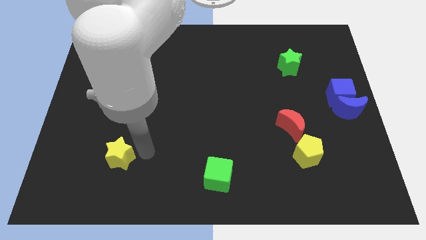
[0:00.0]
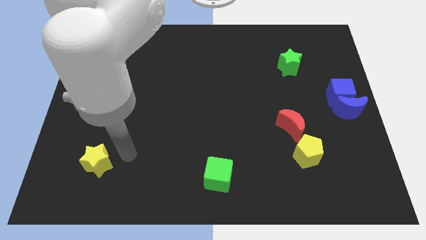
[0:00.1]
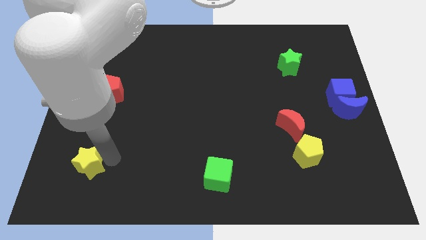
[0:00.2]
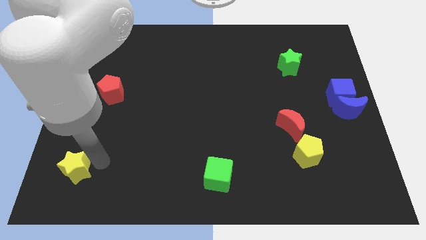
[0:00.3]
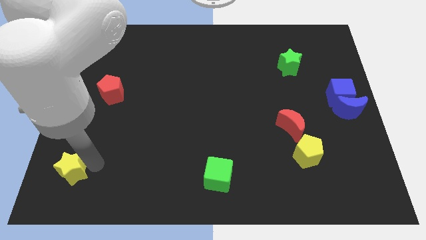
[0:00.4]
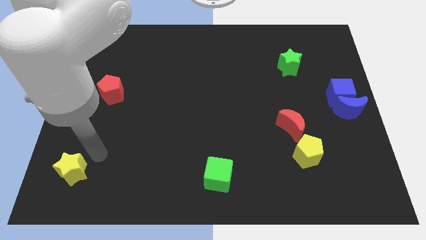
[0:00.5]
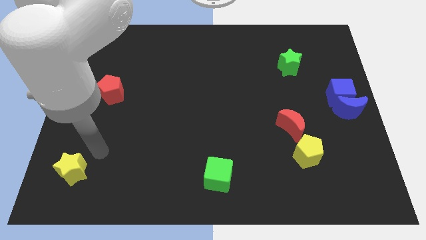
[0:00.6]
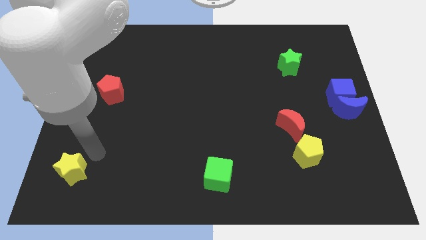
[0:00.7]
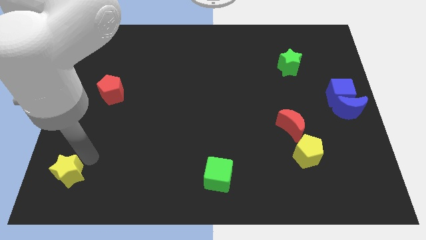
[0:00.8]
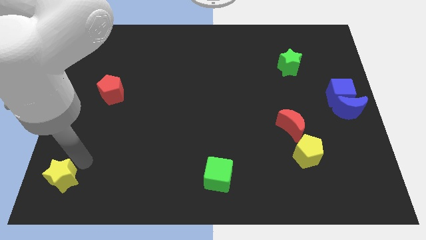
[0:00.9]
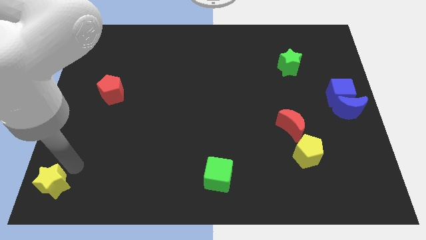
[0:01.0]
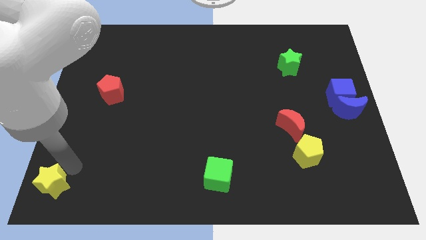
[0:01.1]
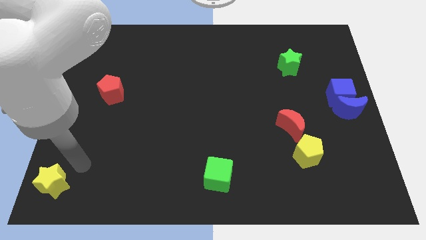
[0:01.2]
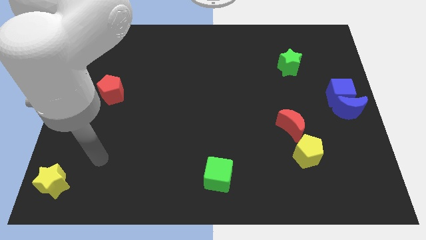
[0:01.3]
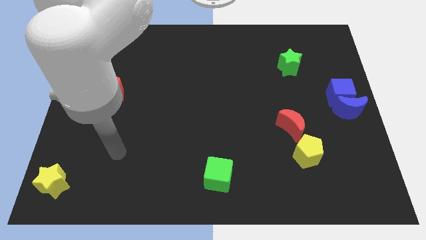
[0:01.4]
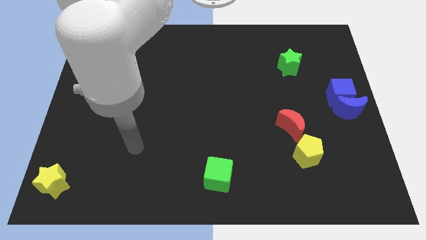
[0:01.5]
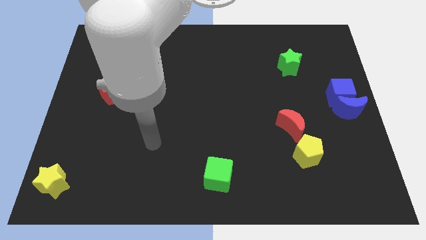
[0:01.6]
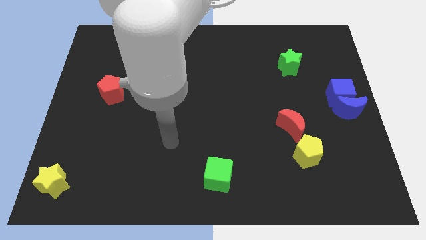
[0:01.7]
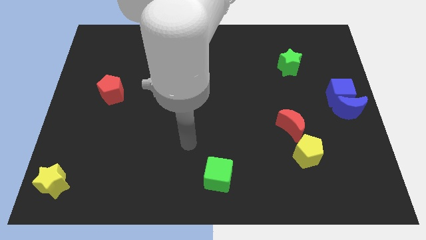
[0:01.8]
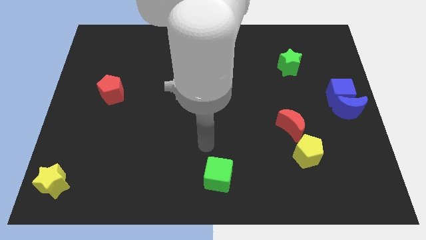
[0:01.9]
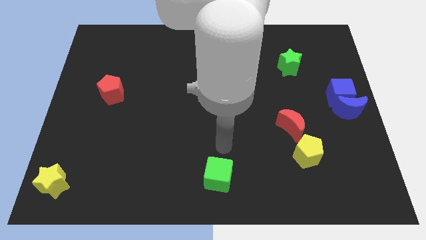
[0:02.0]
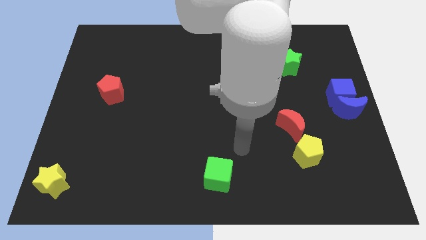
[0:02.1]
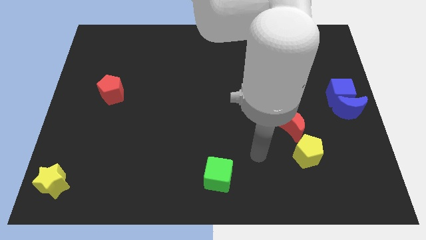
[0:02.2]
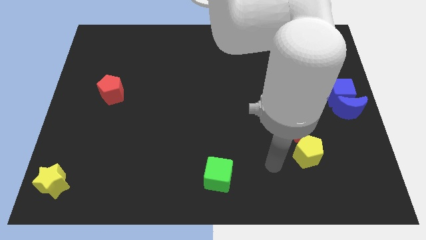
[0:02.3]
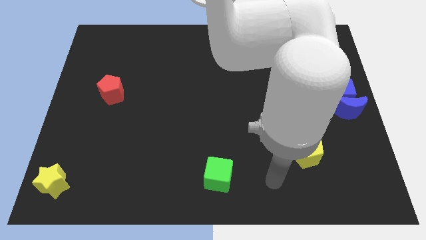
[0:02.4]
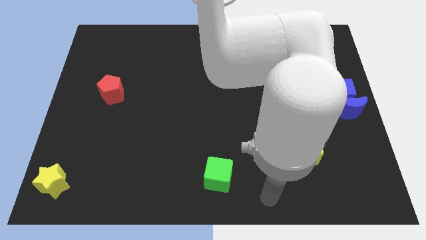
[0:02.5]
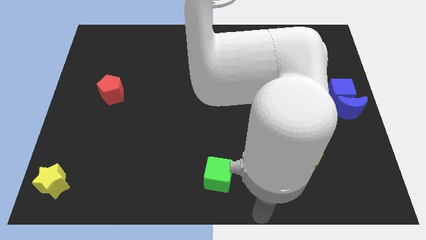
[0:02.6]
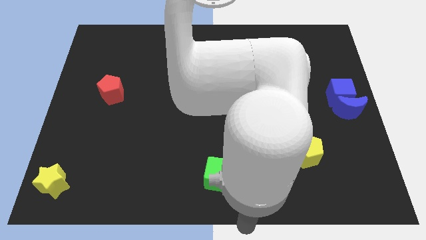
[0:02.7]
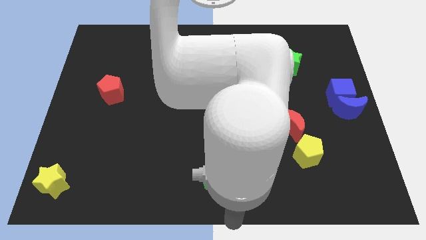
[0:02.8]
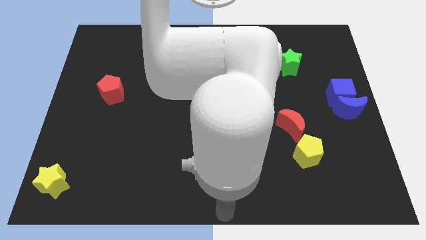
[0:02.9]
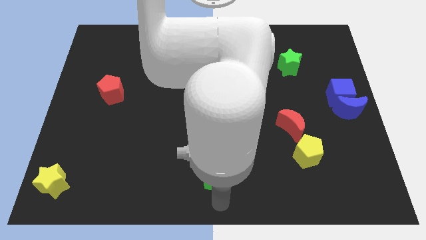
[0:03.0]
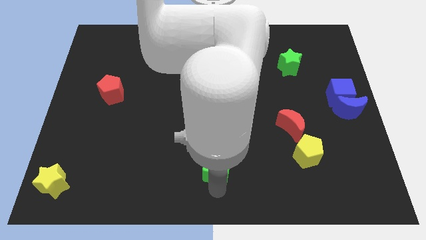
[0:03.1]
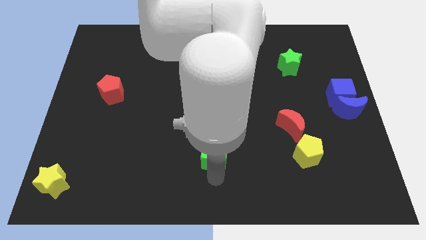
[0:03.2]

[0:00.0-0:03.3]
move yellow star to the left bottom corner

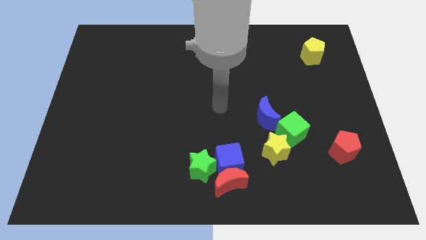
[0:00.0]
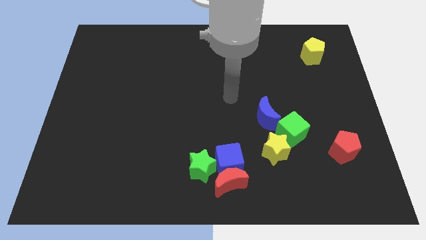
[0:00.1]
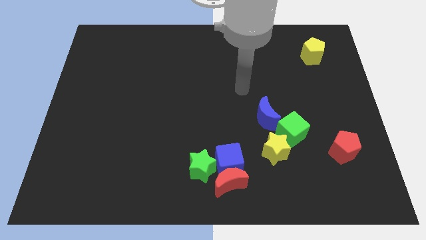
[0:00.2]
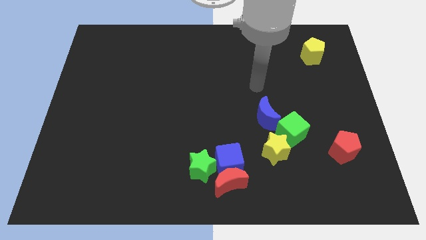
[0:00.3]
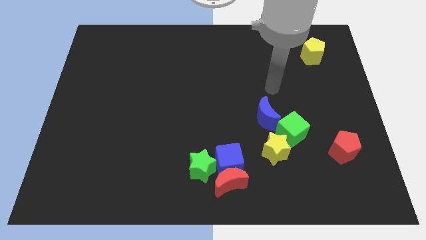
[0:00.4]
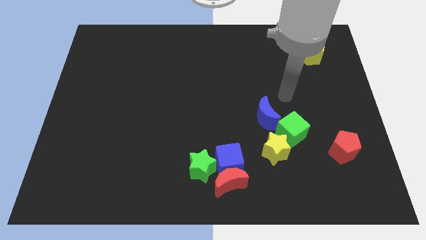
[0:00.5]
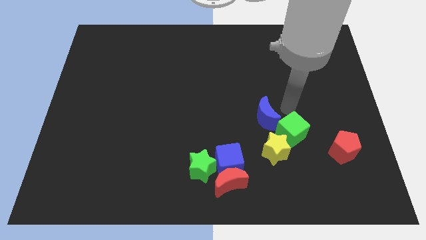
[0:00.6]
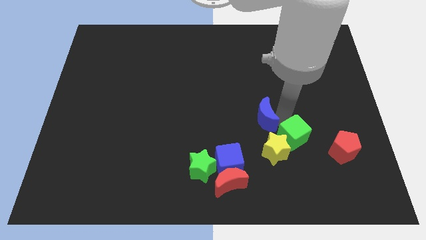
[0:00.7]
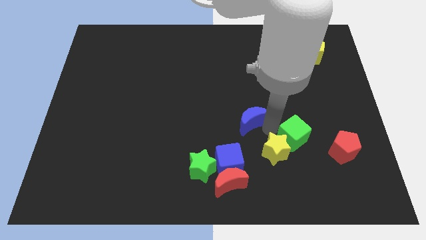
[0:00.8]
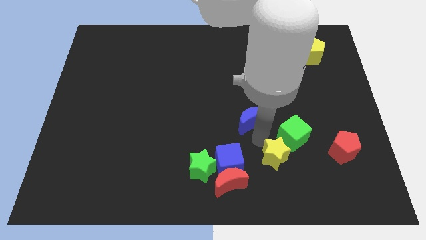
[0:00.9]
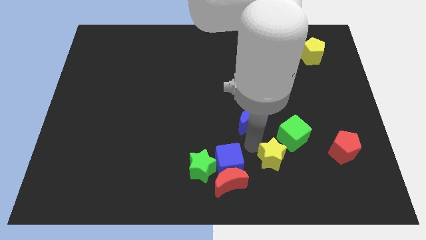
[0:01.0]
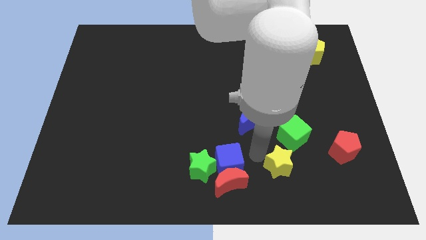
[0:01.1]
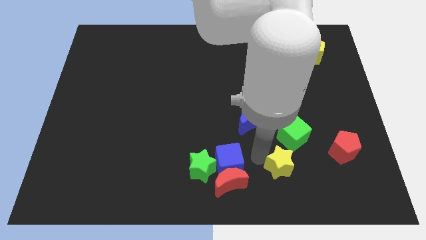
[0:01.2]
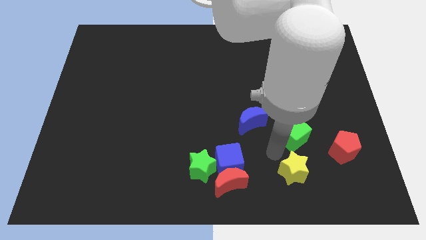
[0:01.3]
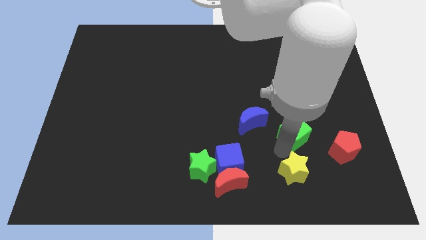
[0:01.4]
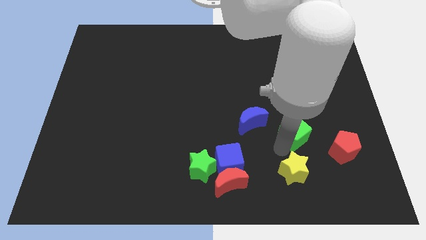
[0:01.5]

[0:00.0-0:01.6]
move the yellow star towards the bottom of green cube

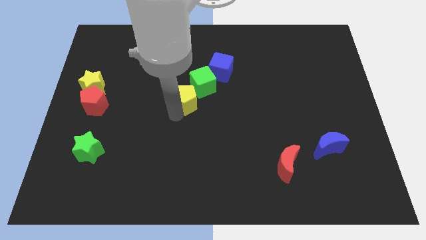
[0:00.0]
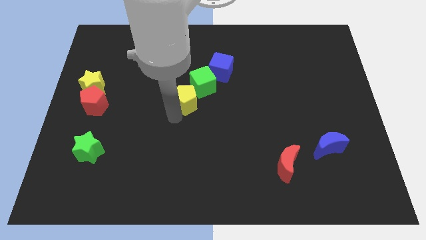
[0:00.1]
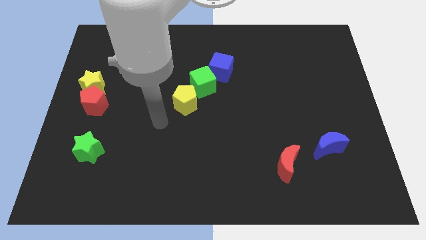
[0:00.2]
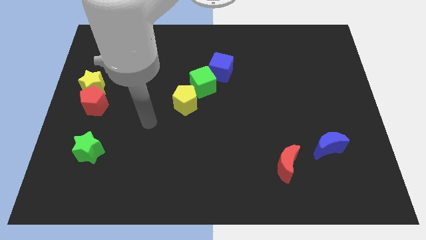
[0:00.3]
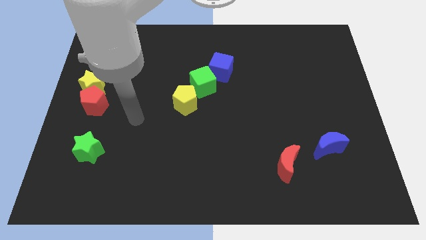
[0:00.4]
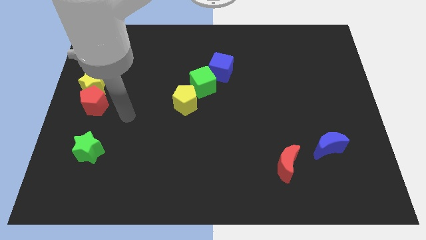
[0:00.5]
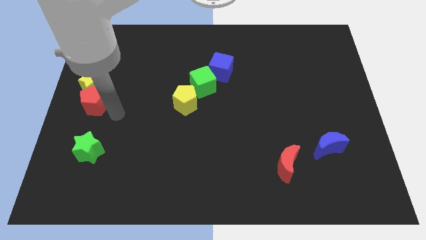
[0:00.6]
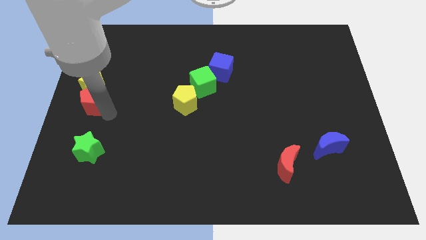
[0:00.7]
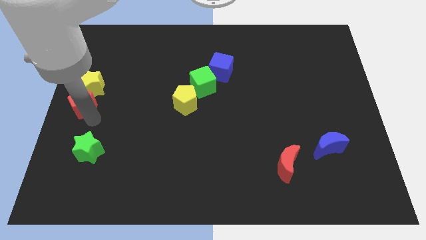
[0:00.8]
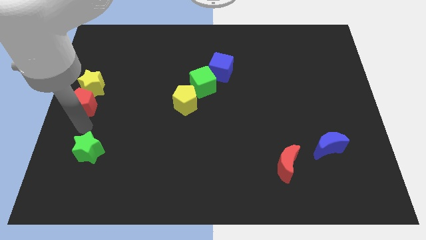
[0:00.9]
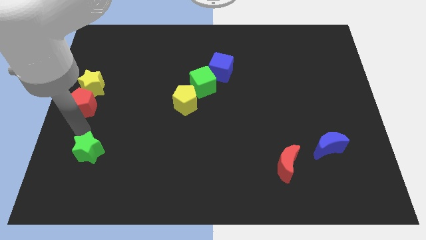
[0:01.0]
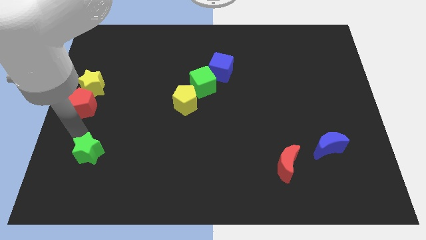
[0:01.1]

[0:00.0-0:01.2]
move your arm away from yellow pentagon

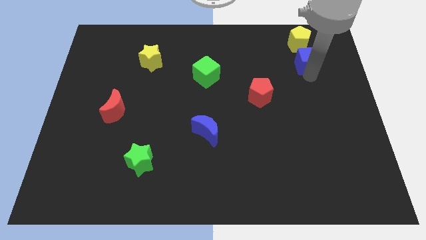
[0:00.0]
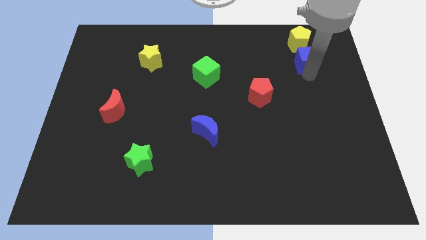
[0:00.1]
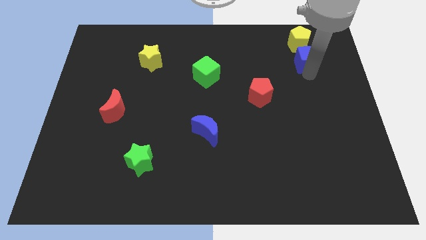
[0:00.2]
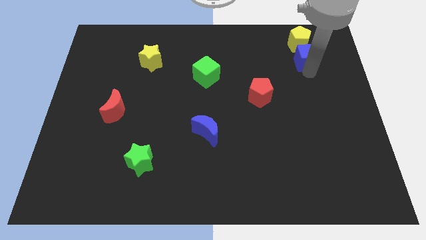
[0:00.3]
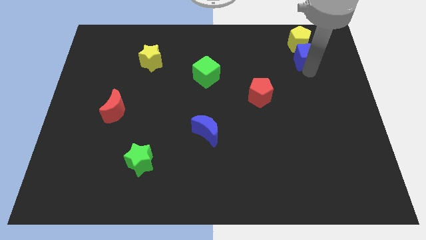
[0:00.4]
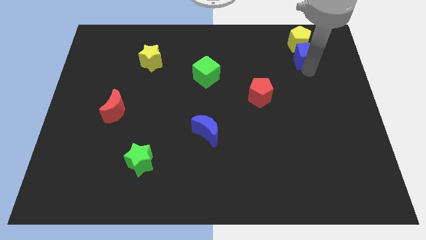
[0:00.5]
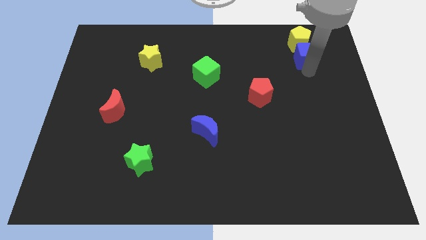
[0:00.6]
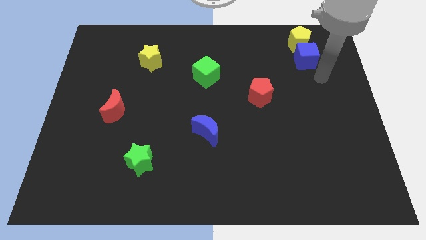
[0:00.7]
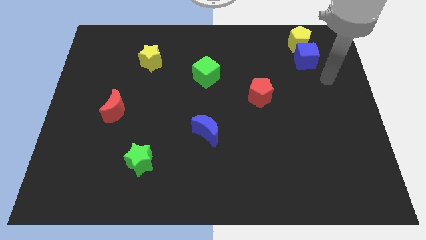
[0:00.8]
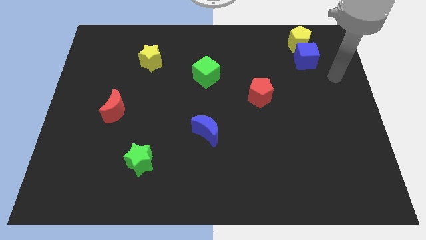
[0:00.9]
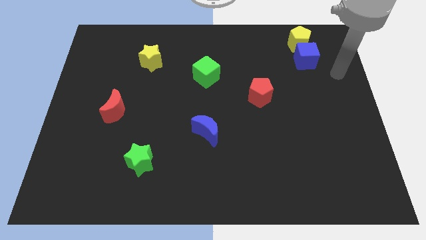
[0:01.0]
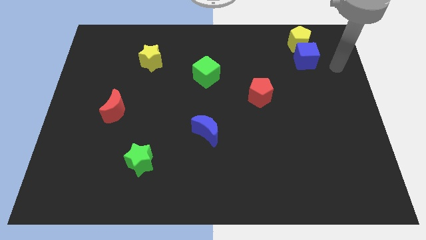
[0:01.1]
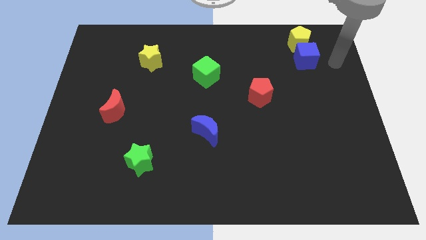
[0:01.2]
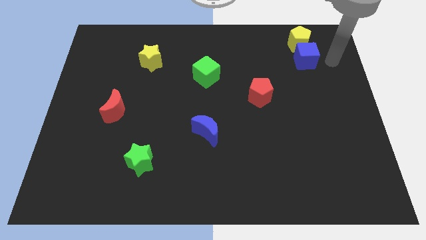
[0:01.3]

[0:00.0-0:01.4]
place the blue cube on the bottom side of the yellow pentagon

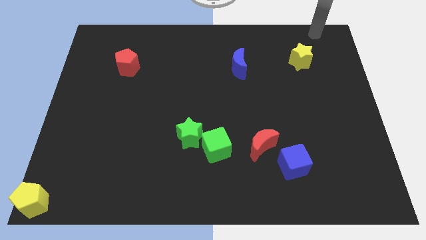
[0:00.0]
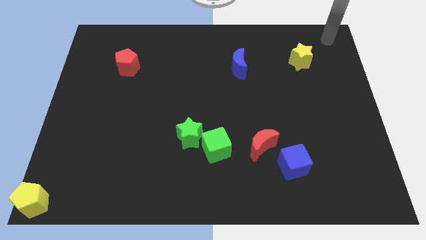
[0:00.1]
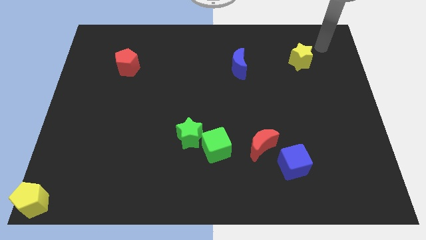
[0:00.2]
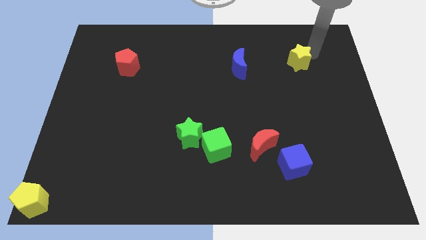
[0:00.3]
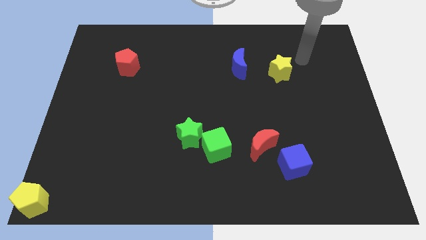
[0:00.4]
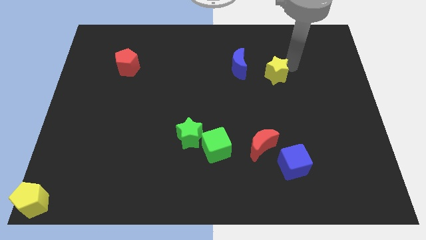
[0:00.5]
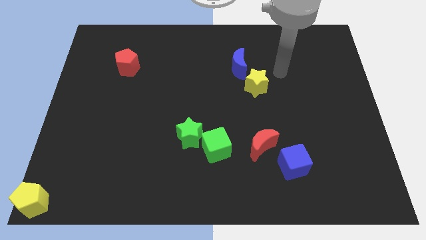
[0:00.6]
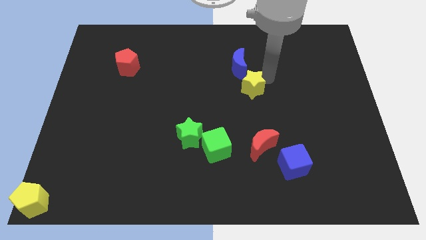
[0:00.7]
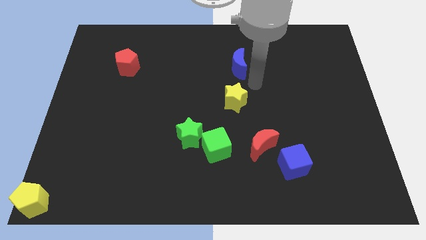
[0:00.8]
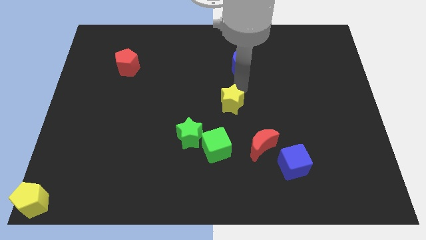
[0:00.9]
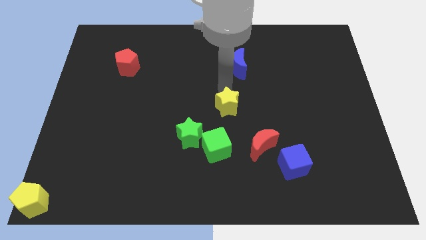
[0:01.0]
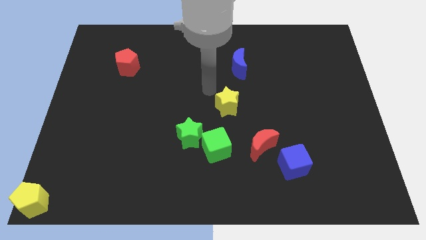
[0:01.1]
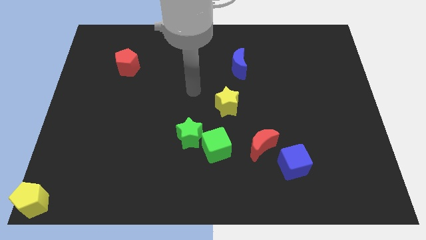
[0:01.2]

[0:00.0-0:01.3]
move the green star to the center of the board
